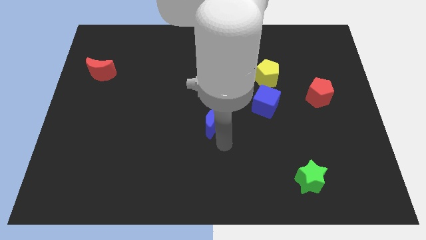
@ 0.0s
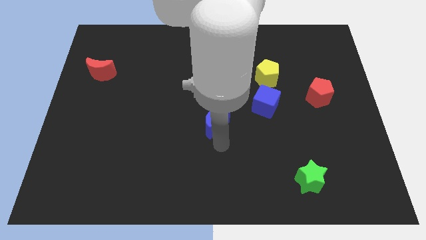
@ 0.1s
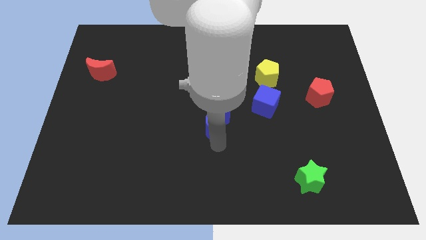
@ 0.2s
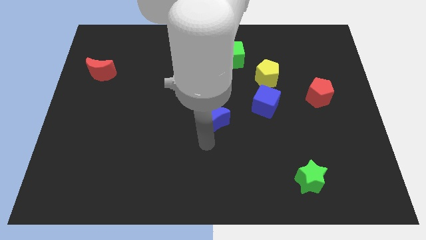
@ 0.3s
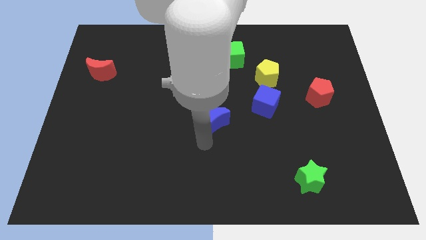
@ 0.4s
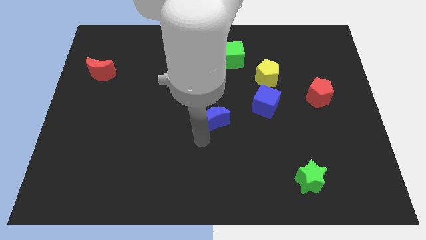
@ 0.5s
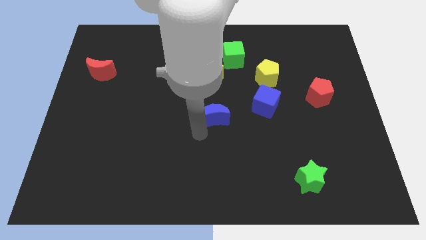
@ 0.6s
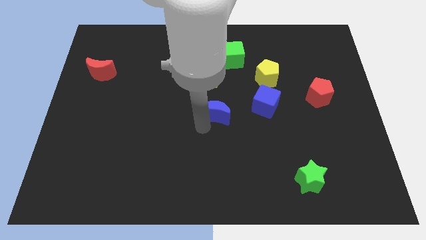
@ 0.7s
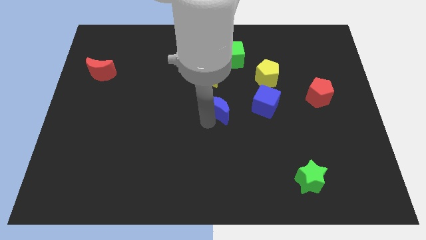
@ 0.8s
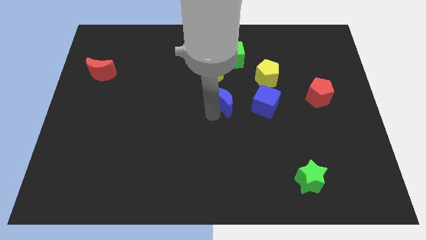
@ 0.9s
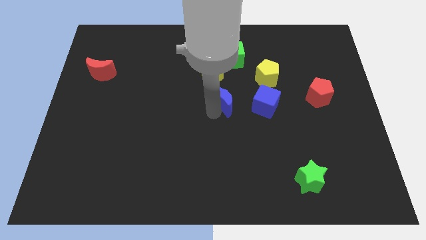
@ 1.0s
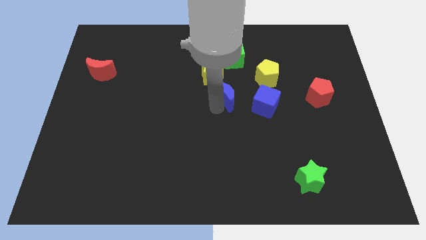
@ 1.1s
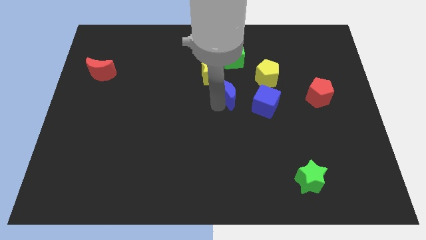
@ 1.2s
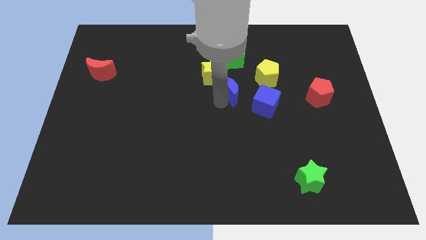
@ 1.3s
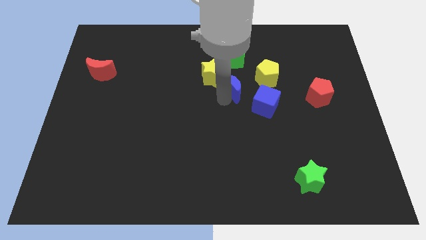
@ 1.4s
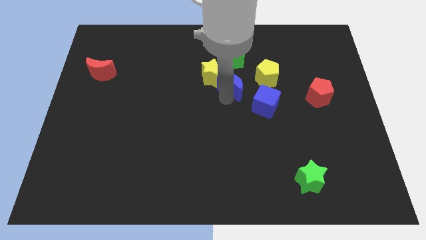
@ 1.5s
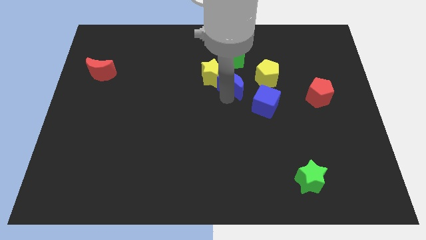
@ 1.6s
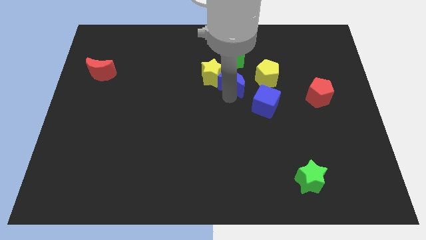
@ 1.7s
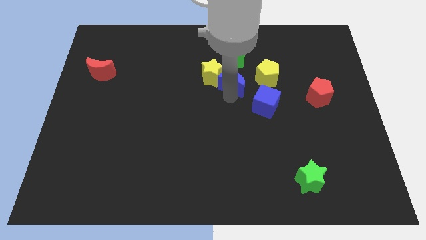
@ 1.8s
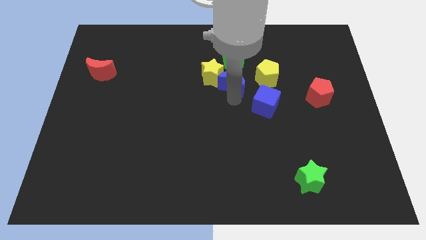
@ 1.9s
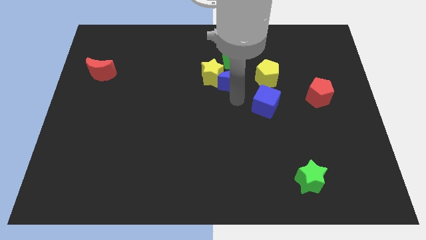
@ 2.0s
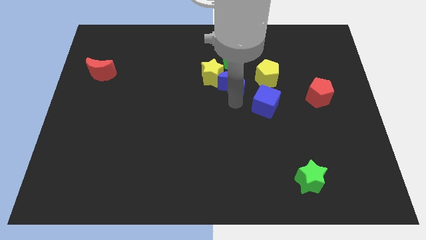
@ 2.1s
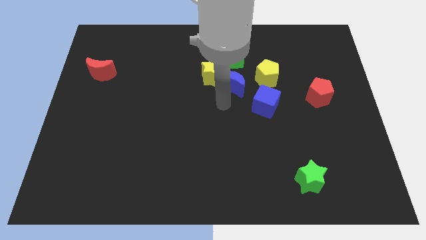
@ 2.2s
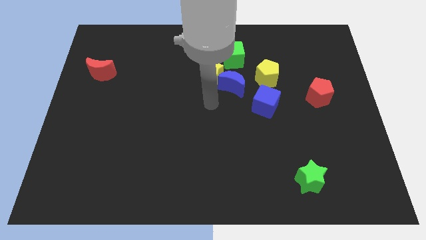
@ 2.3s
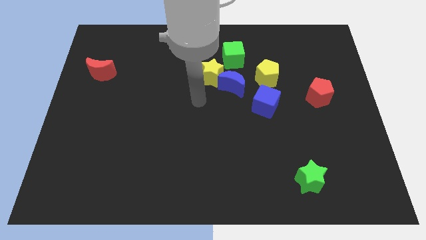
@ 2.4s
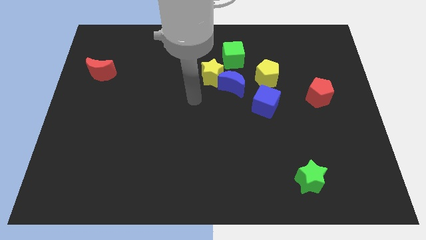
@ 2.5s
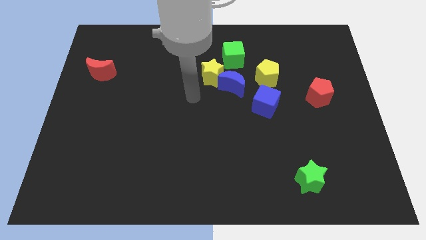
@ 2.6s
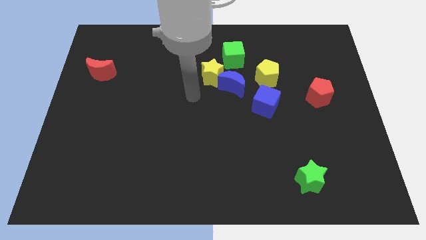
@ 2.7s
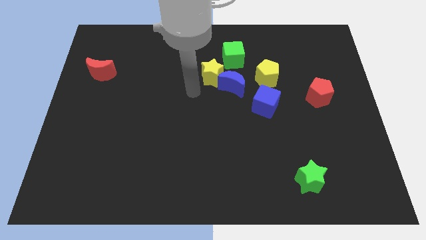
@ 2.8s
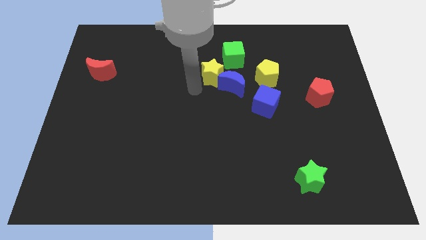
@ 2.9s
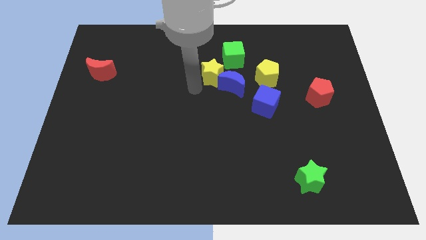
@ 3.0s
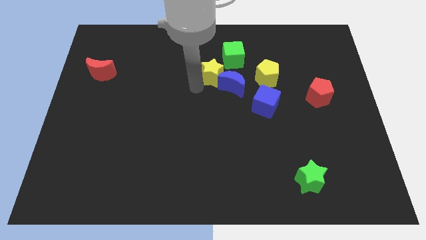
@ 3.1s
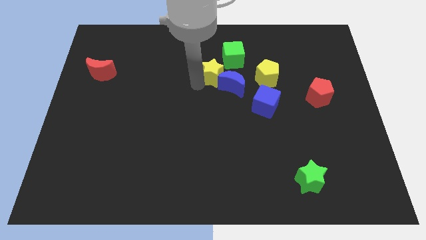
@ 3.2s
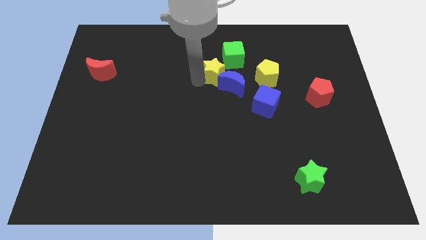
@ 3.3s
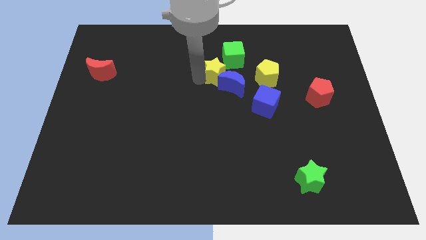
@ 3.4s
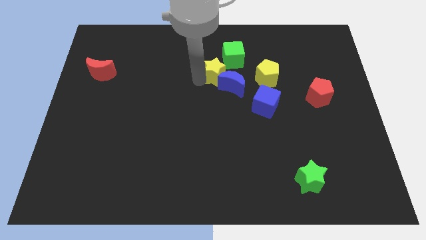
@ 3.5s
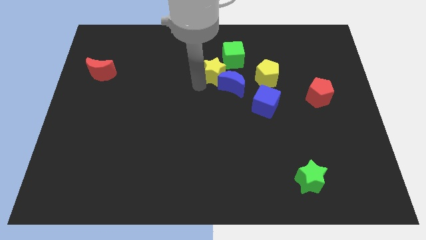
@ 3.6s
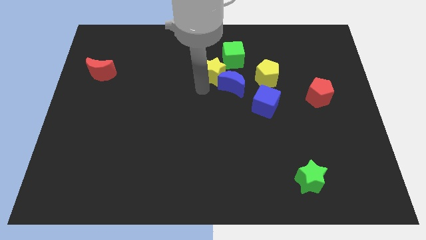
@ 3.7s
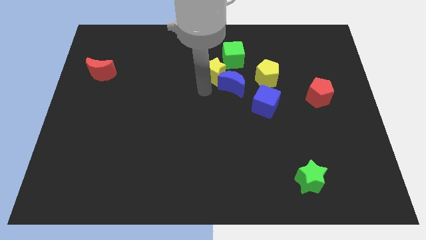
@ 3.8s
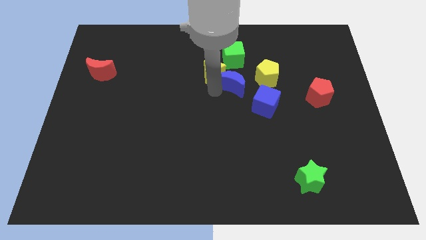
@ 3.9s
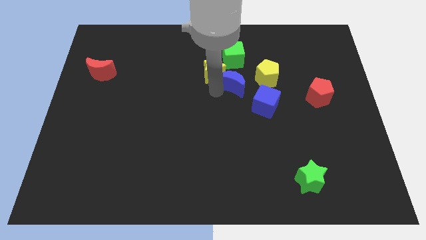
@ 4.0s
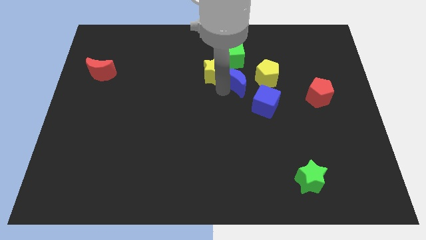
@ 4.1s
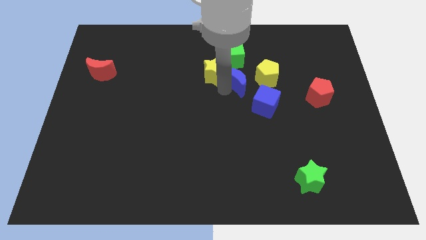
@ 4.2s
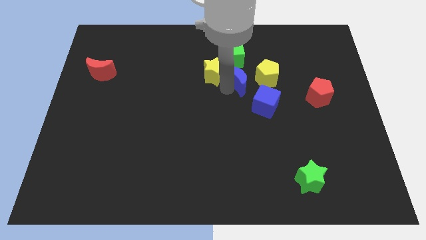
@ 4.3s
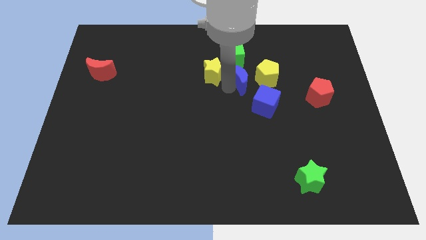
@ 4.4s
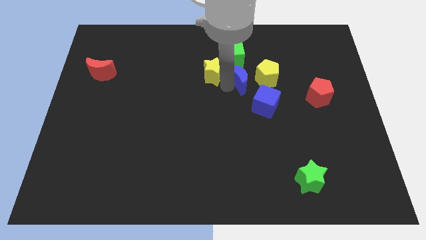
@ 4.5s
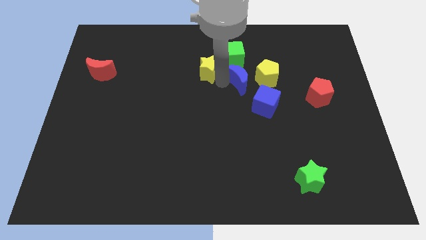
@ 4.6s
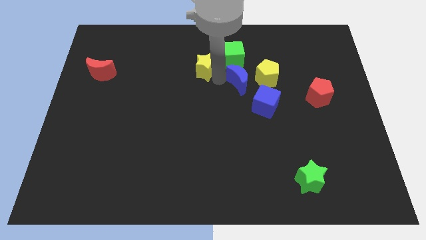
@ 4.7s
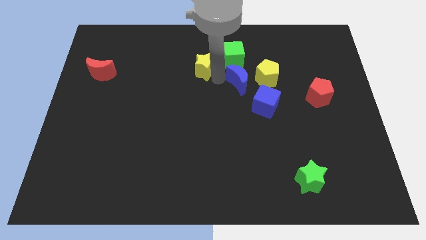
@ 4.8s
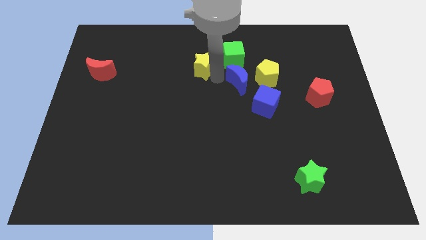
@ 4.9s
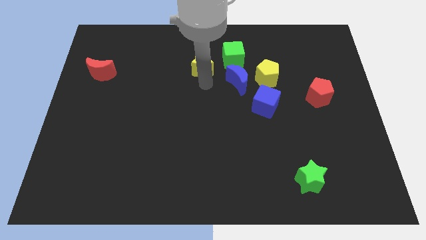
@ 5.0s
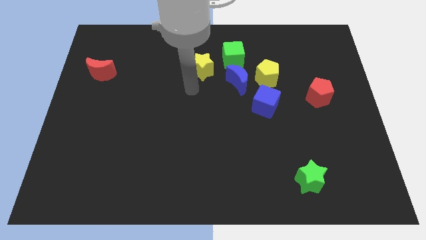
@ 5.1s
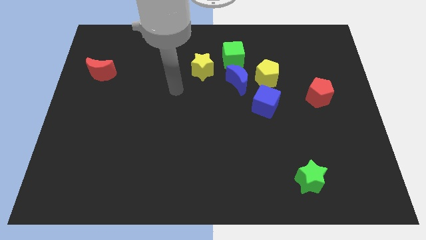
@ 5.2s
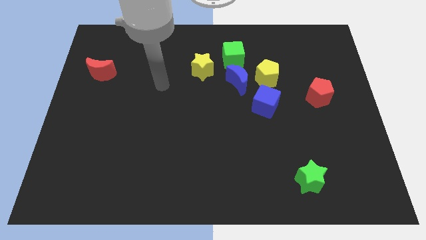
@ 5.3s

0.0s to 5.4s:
place the blue crescent in between the yellow pentagon and star

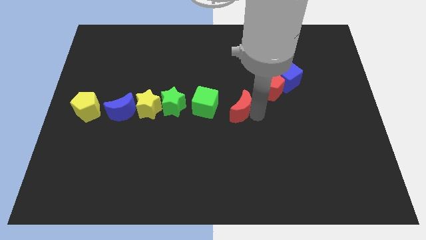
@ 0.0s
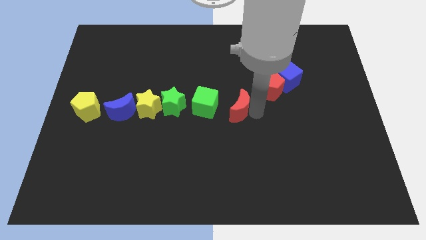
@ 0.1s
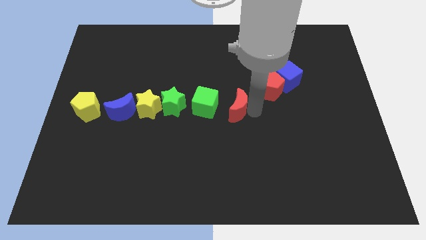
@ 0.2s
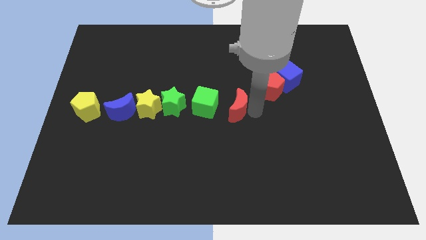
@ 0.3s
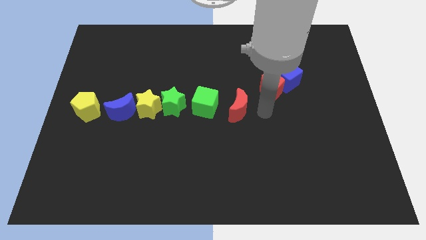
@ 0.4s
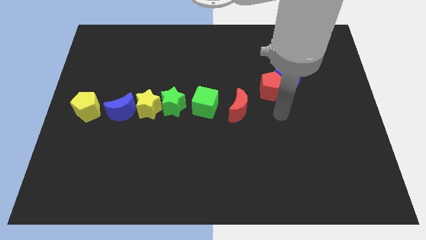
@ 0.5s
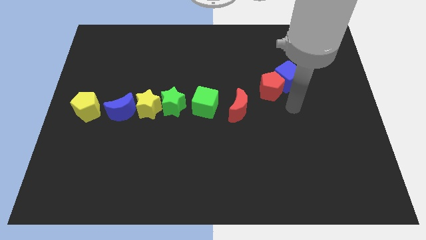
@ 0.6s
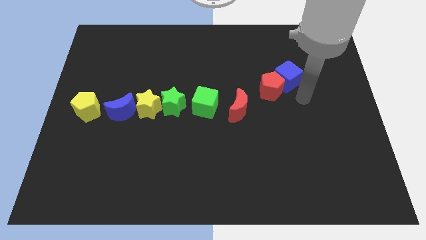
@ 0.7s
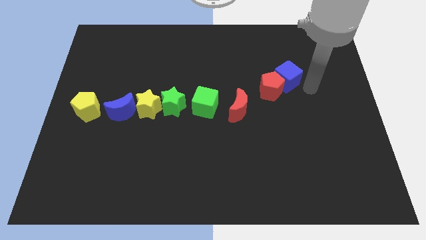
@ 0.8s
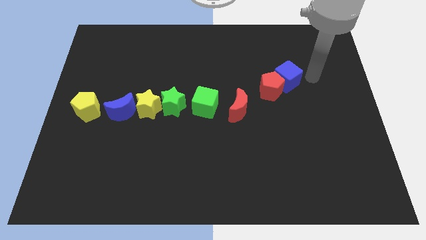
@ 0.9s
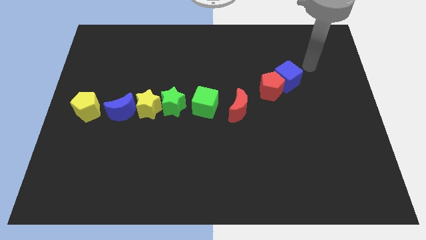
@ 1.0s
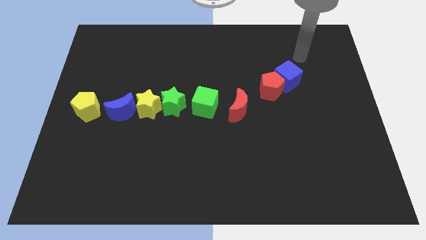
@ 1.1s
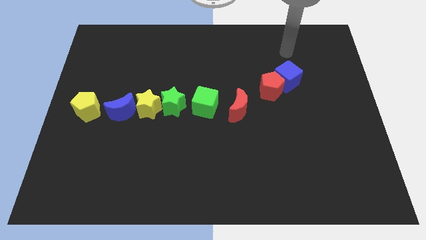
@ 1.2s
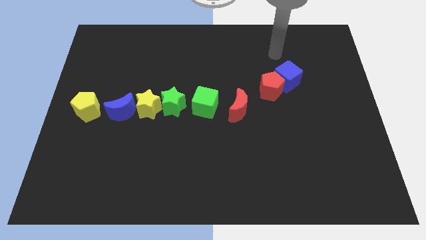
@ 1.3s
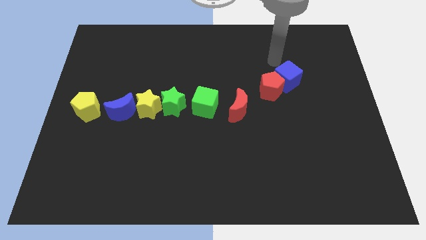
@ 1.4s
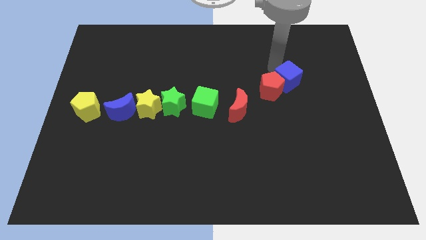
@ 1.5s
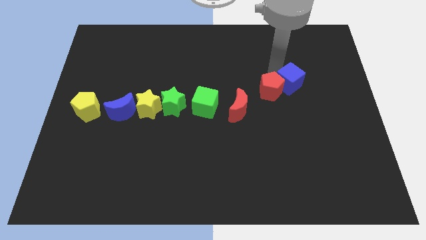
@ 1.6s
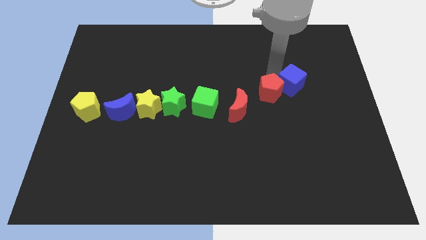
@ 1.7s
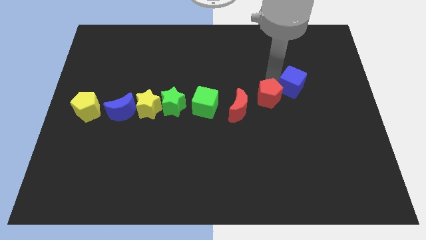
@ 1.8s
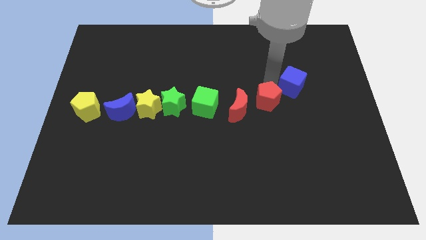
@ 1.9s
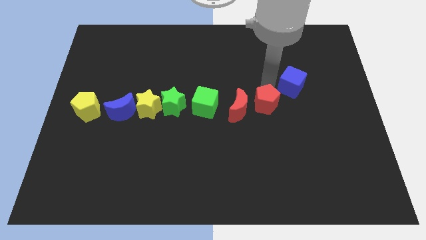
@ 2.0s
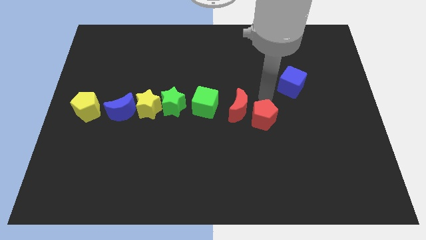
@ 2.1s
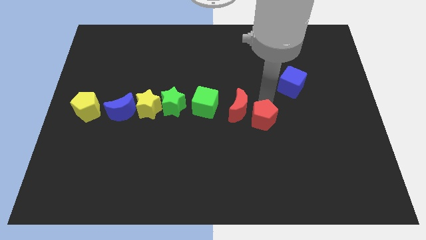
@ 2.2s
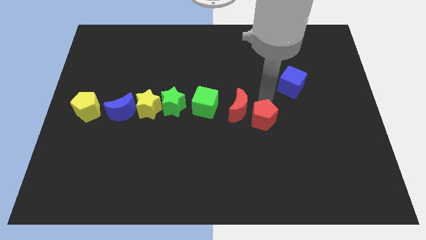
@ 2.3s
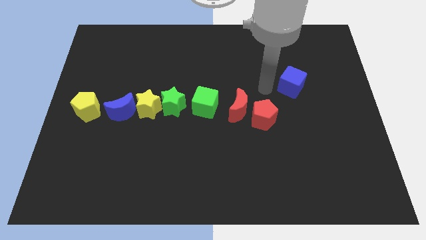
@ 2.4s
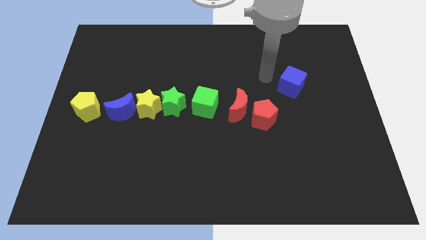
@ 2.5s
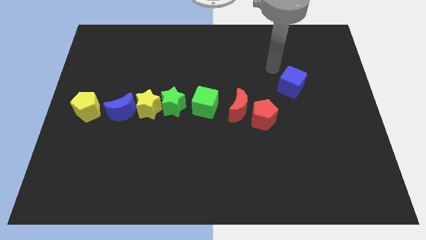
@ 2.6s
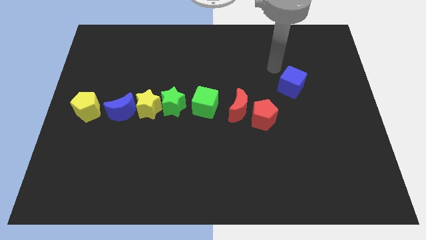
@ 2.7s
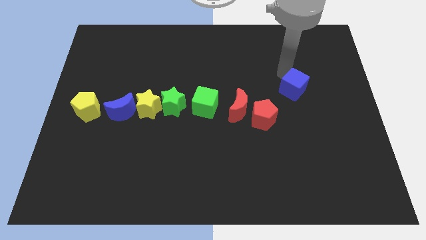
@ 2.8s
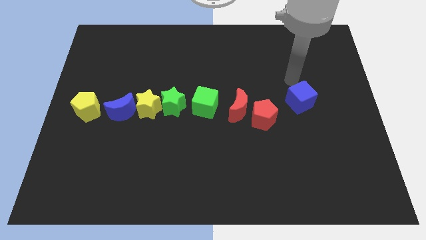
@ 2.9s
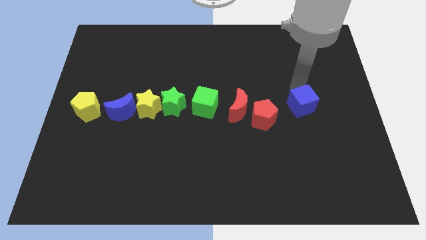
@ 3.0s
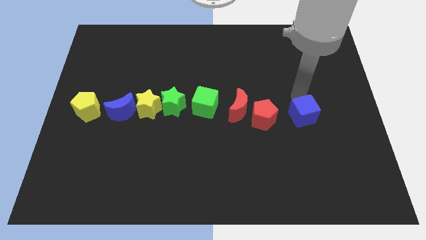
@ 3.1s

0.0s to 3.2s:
separate the red pentagon from the blue cube

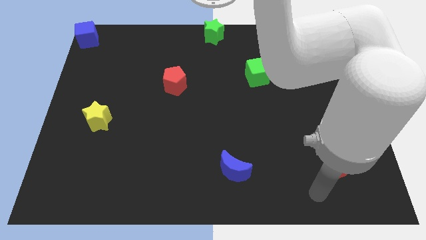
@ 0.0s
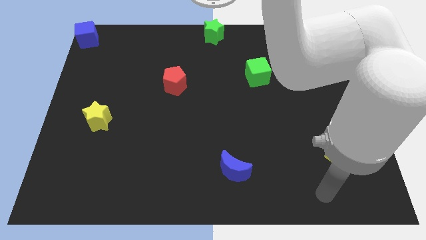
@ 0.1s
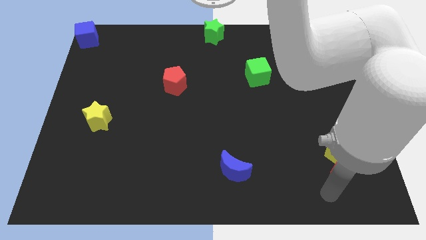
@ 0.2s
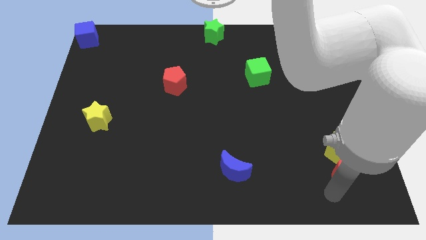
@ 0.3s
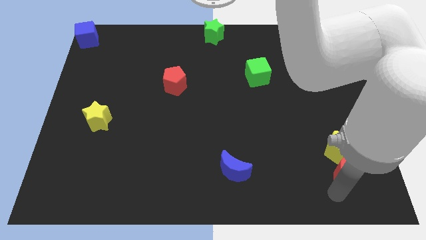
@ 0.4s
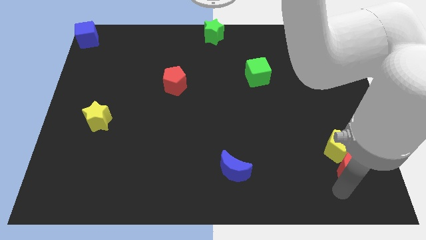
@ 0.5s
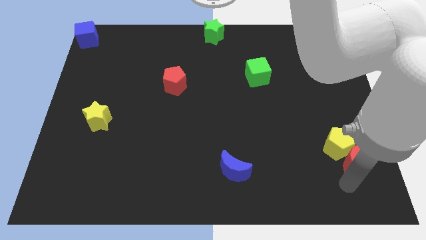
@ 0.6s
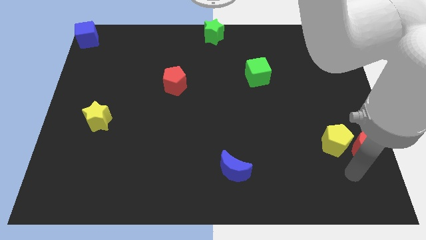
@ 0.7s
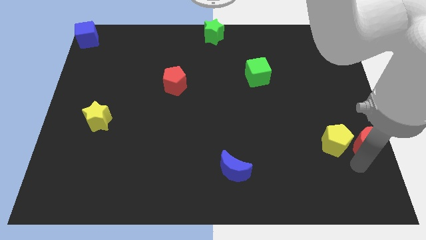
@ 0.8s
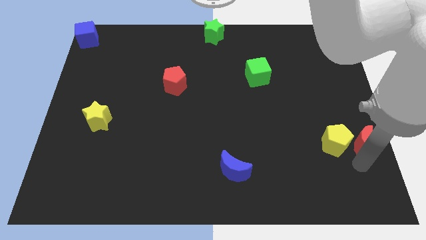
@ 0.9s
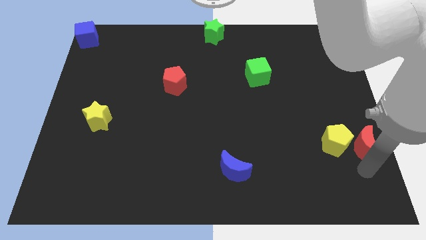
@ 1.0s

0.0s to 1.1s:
separate the red moon from the yellow pentagon
